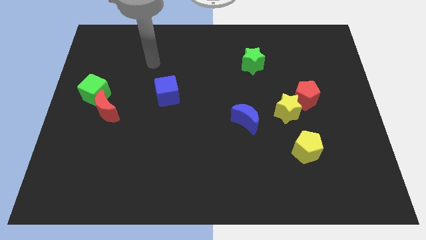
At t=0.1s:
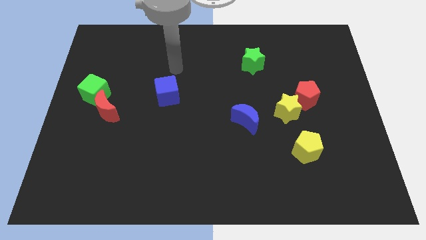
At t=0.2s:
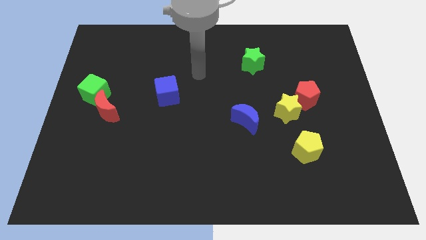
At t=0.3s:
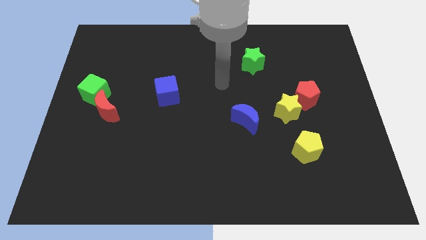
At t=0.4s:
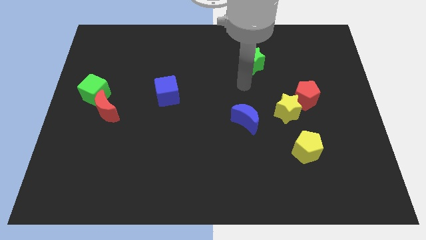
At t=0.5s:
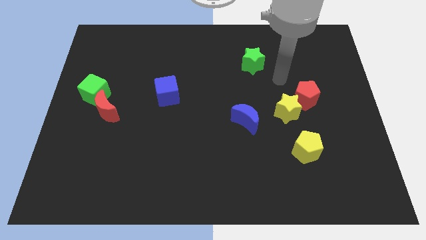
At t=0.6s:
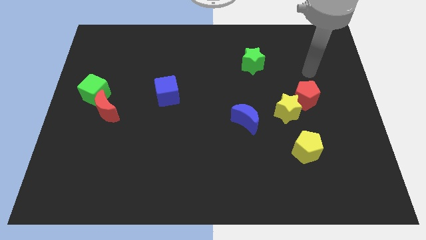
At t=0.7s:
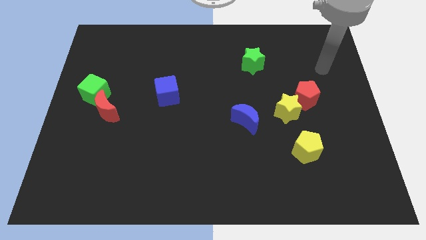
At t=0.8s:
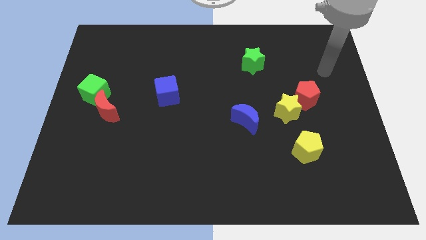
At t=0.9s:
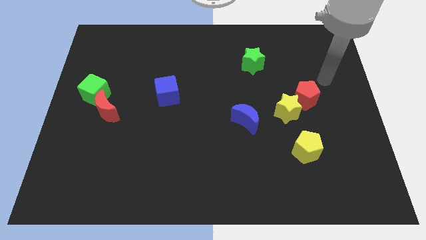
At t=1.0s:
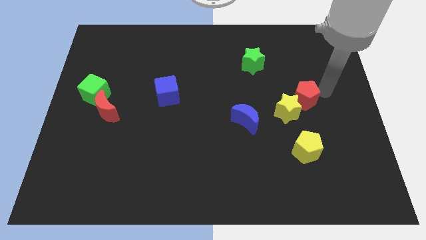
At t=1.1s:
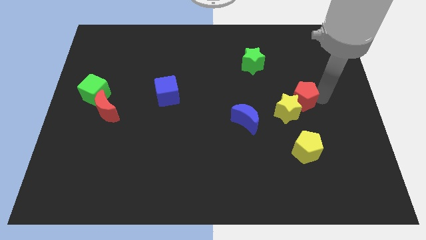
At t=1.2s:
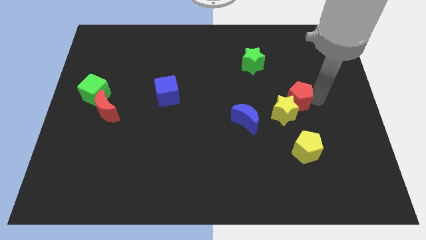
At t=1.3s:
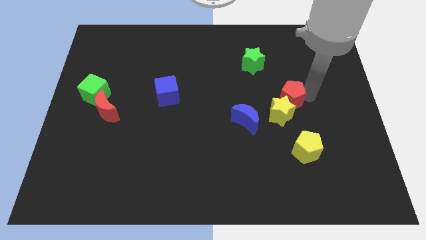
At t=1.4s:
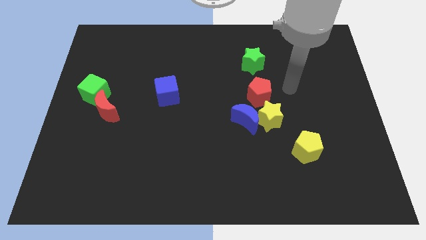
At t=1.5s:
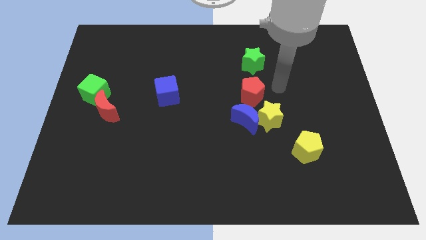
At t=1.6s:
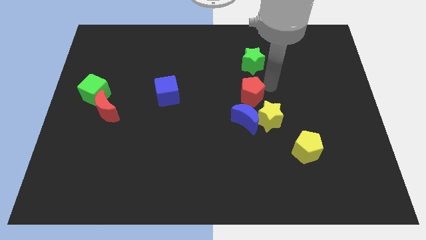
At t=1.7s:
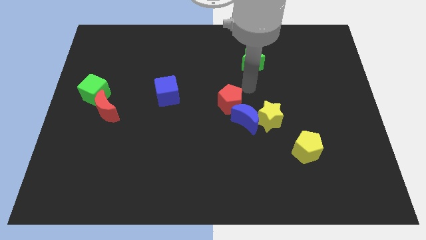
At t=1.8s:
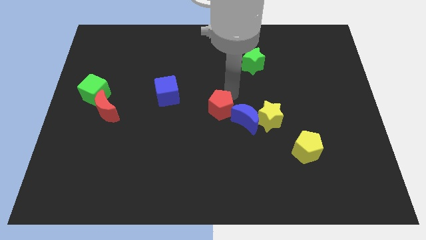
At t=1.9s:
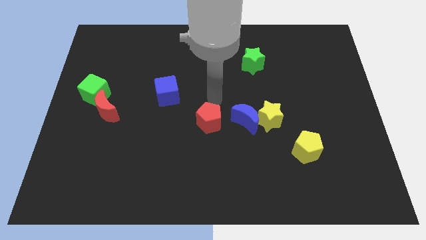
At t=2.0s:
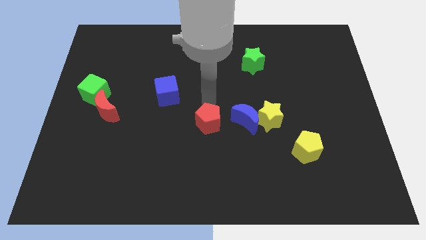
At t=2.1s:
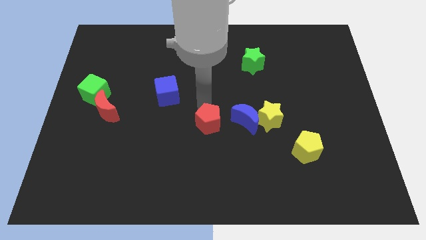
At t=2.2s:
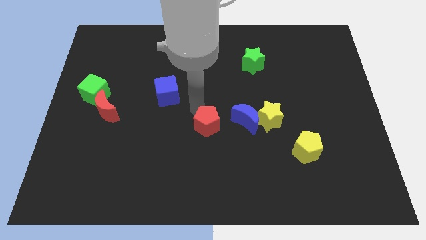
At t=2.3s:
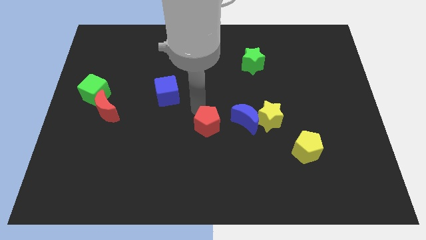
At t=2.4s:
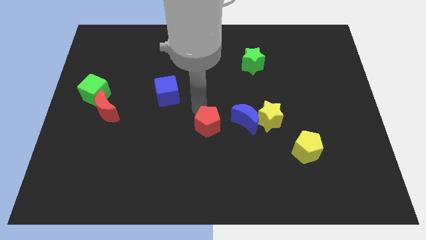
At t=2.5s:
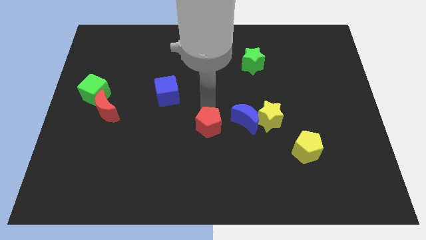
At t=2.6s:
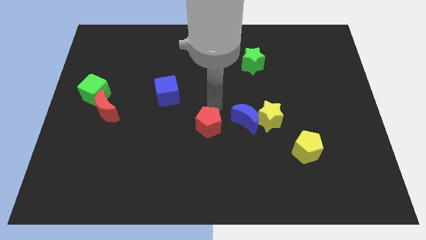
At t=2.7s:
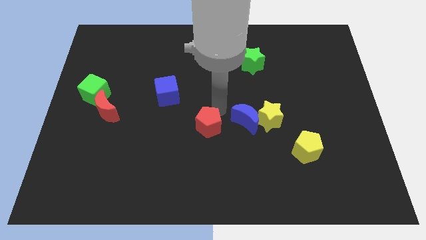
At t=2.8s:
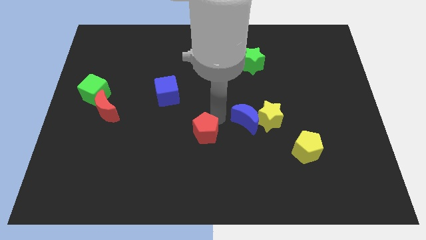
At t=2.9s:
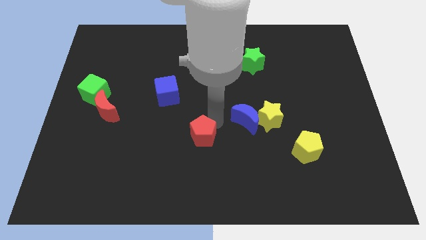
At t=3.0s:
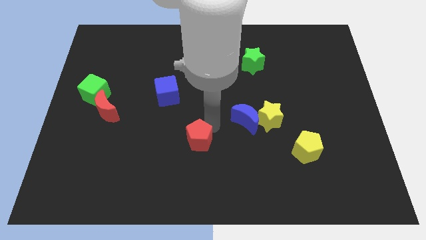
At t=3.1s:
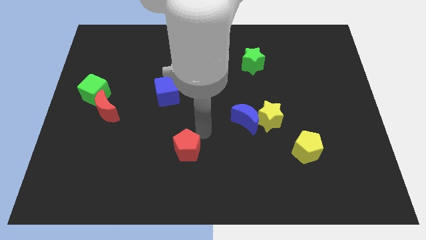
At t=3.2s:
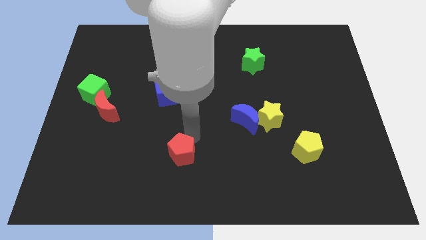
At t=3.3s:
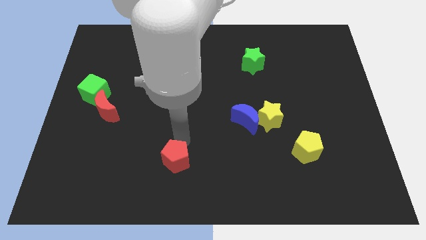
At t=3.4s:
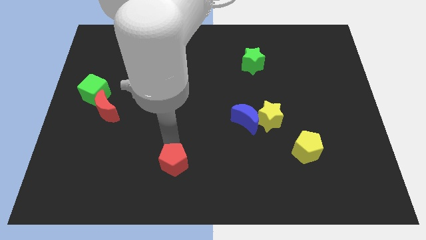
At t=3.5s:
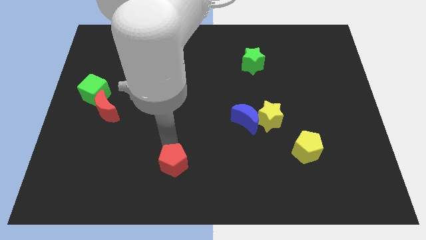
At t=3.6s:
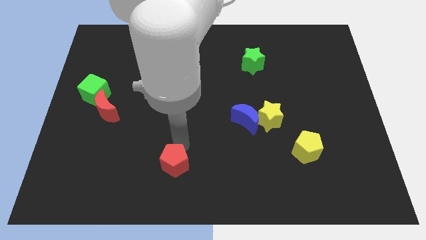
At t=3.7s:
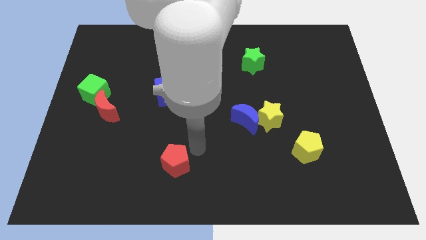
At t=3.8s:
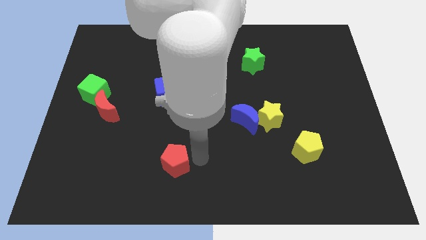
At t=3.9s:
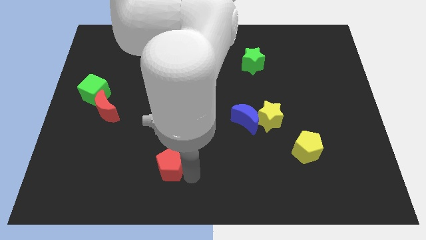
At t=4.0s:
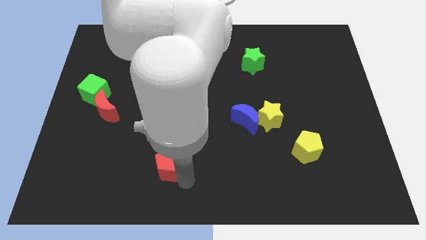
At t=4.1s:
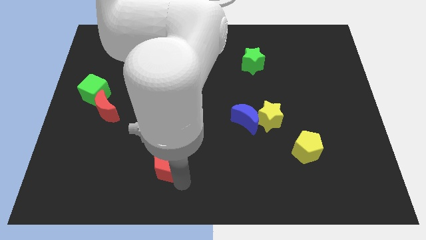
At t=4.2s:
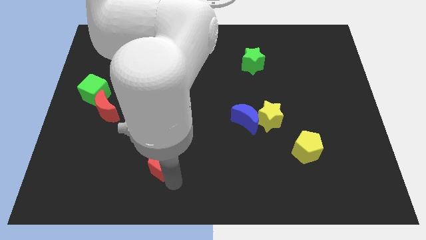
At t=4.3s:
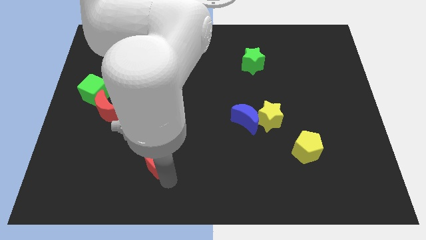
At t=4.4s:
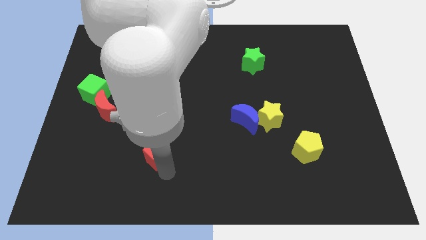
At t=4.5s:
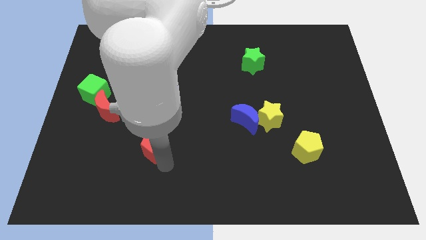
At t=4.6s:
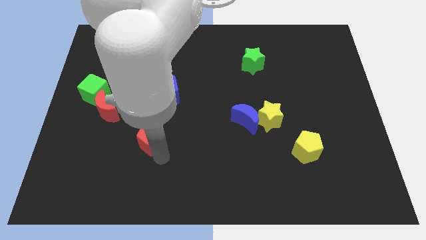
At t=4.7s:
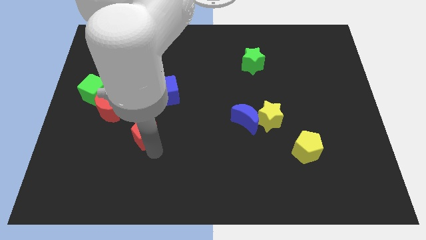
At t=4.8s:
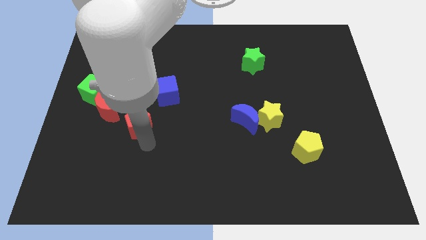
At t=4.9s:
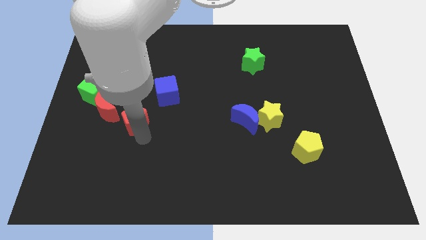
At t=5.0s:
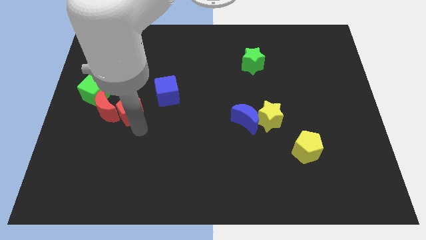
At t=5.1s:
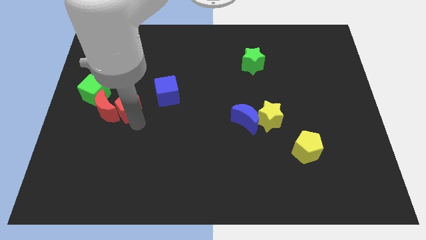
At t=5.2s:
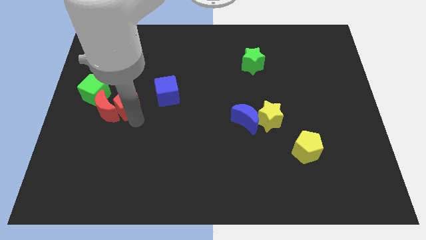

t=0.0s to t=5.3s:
move the red pentagon to the red moon

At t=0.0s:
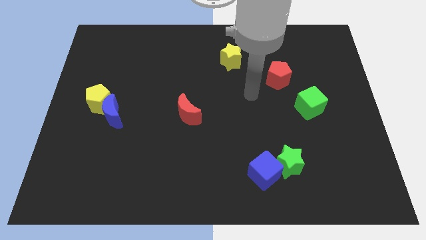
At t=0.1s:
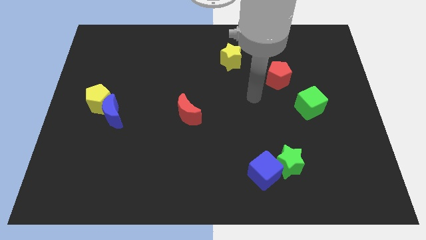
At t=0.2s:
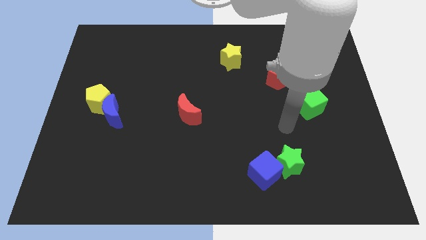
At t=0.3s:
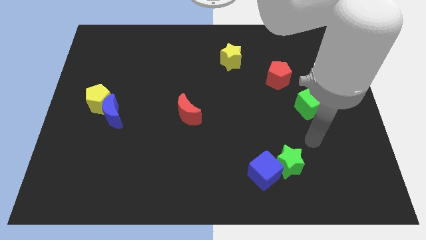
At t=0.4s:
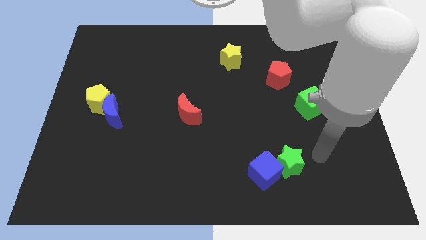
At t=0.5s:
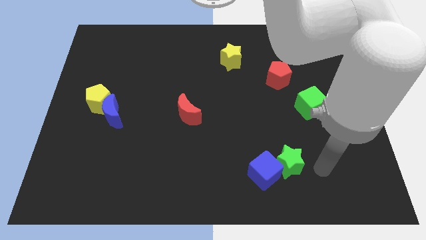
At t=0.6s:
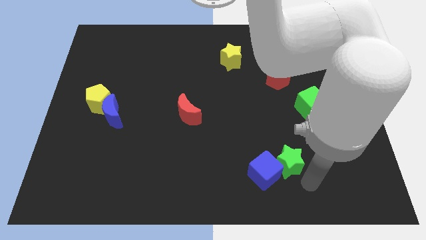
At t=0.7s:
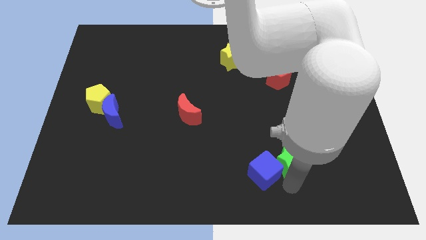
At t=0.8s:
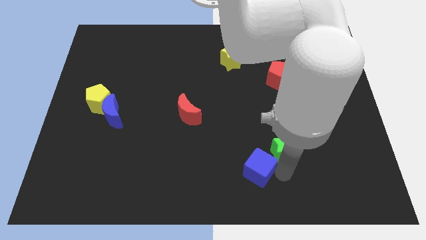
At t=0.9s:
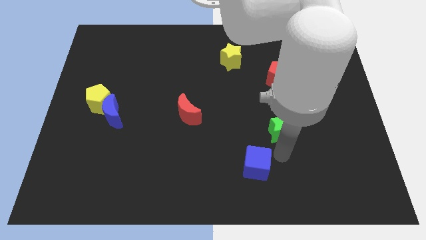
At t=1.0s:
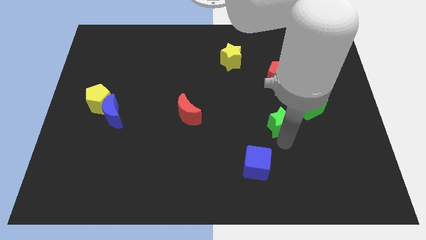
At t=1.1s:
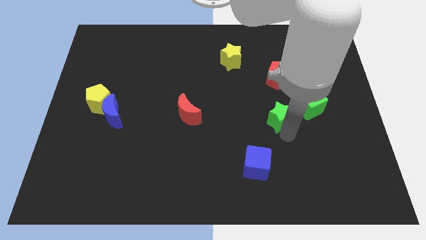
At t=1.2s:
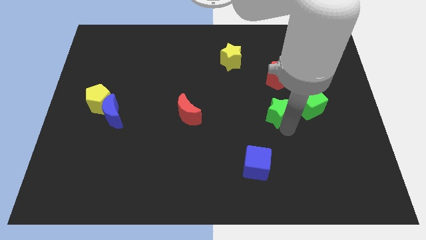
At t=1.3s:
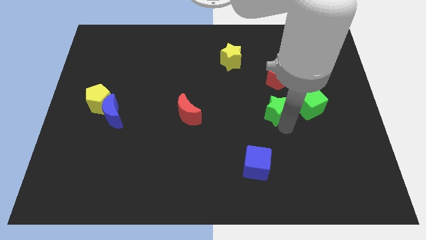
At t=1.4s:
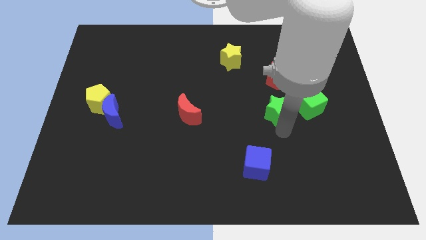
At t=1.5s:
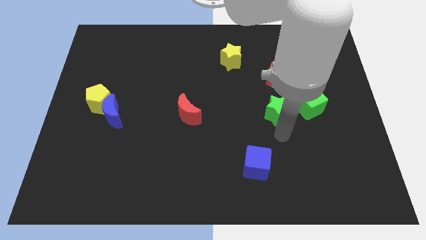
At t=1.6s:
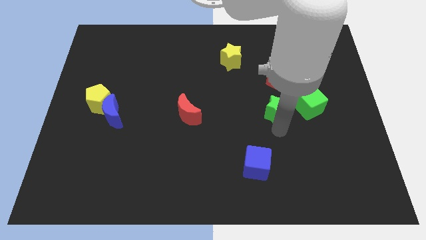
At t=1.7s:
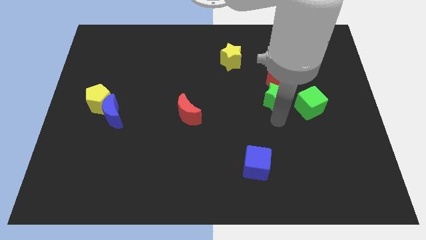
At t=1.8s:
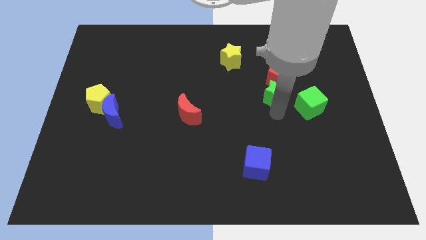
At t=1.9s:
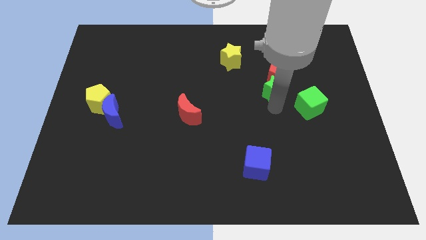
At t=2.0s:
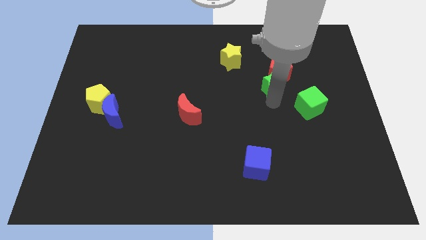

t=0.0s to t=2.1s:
push the green star next to the red pentagon

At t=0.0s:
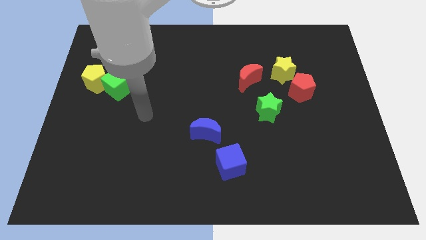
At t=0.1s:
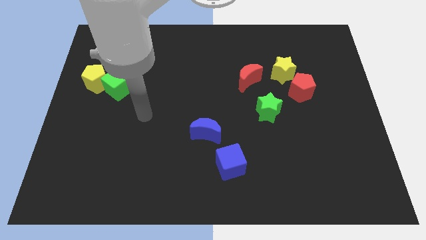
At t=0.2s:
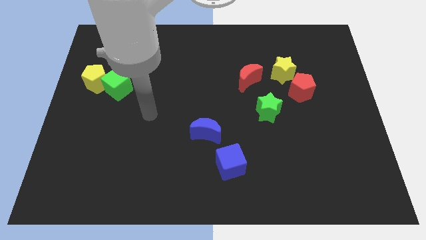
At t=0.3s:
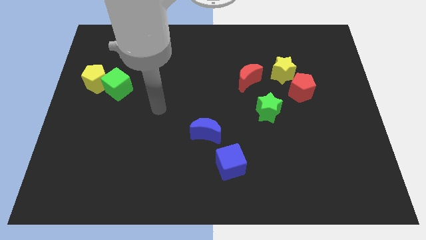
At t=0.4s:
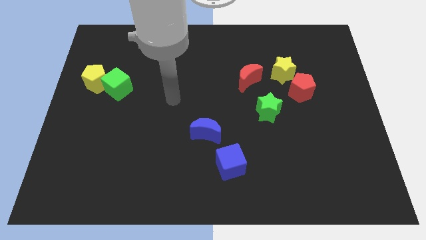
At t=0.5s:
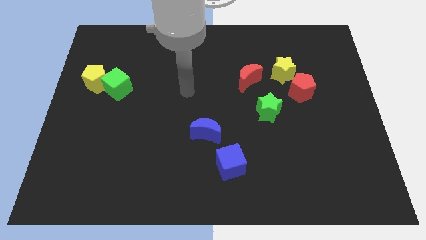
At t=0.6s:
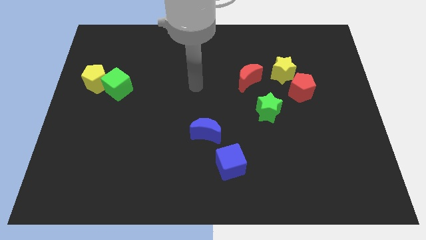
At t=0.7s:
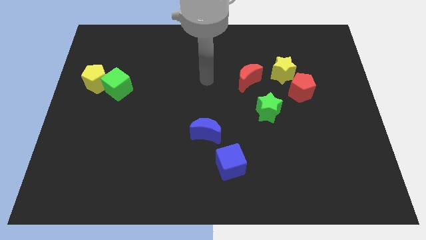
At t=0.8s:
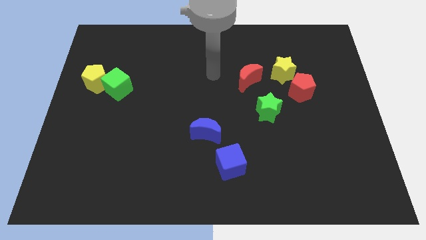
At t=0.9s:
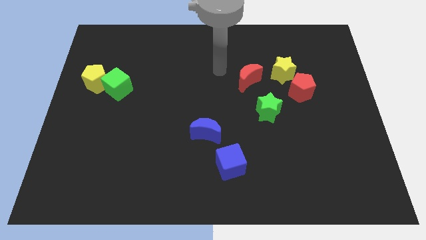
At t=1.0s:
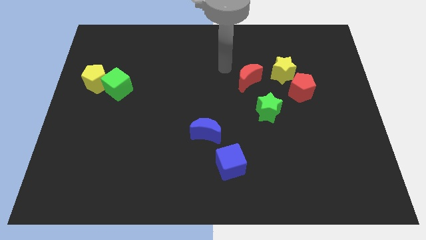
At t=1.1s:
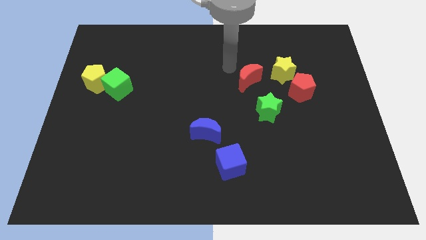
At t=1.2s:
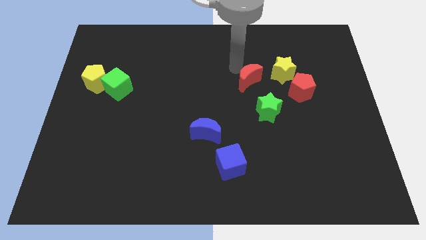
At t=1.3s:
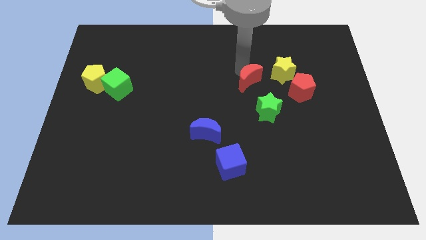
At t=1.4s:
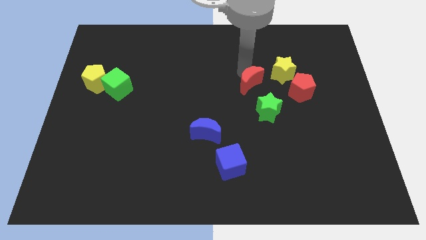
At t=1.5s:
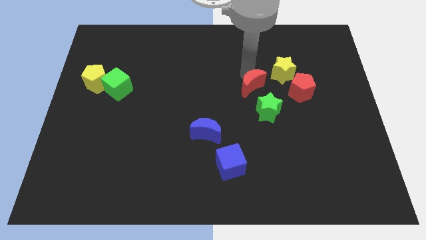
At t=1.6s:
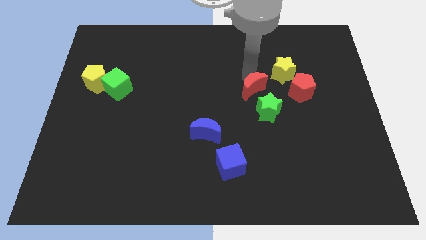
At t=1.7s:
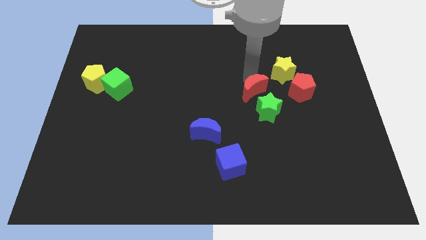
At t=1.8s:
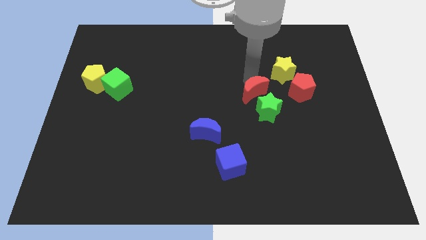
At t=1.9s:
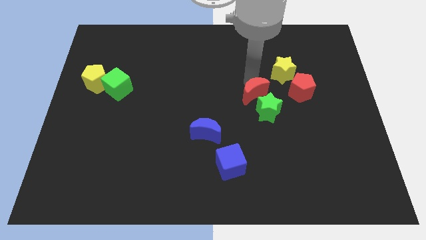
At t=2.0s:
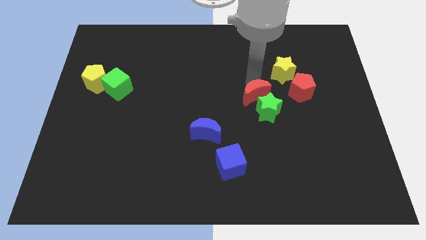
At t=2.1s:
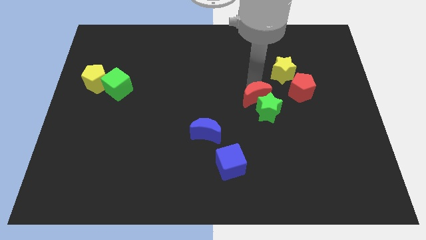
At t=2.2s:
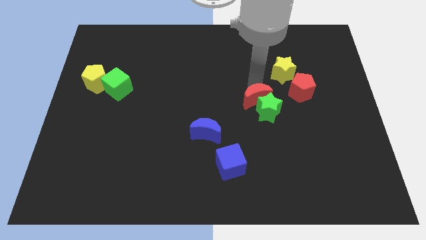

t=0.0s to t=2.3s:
slide the red moon towards the green star
